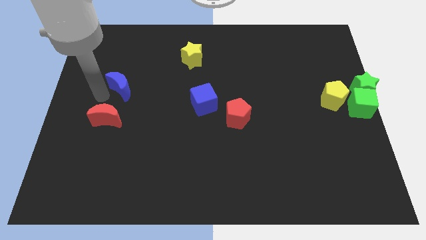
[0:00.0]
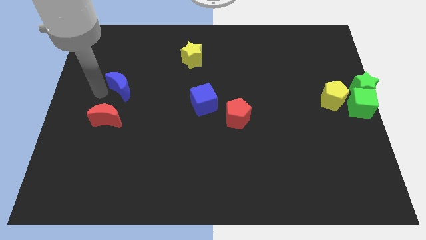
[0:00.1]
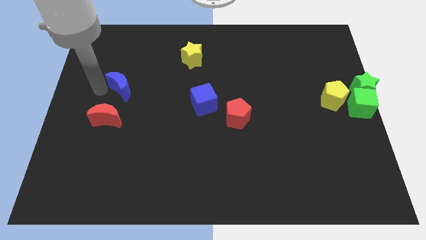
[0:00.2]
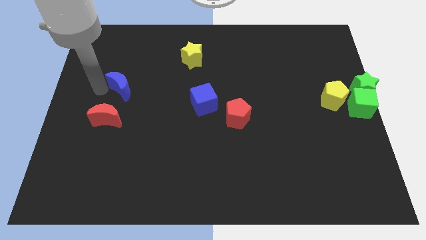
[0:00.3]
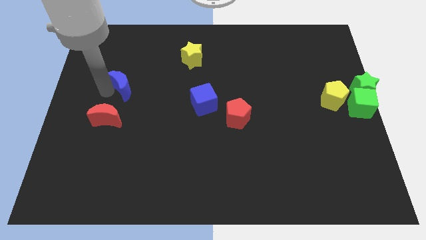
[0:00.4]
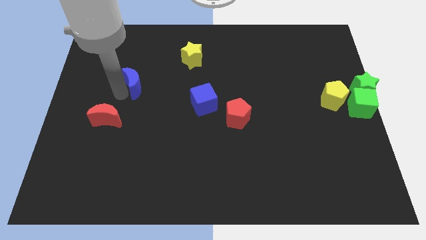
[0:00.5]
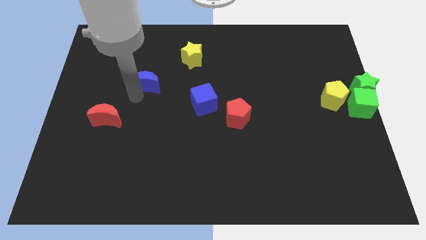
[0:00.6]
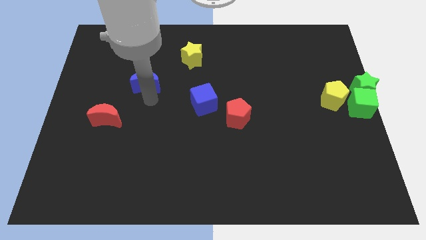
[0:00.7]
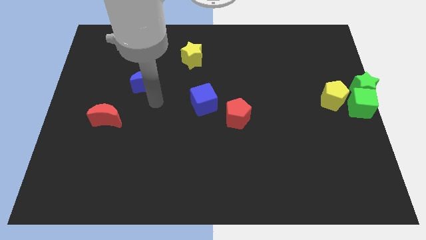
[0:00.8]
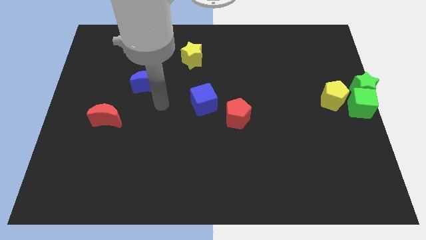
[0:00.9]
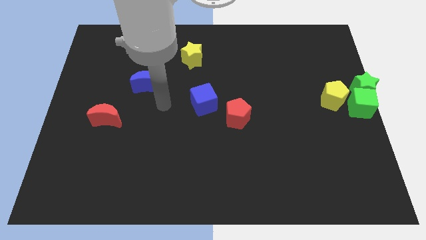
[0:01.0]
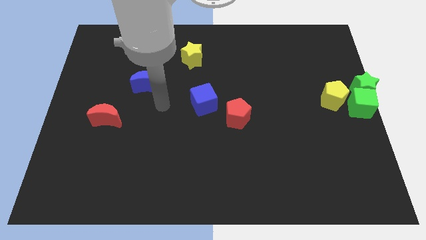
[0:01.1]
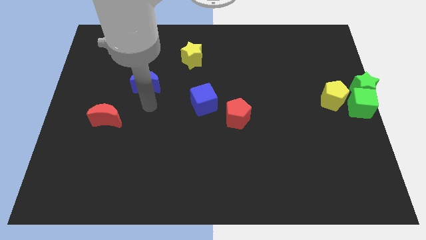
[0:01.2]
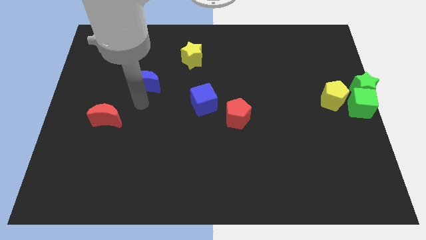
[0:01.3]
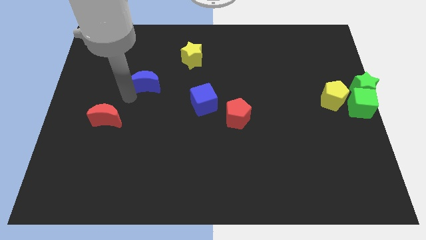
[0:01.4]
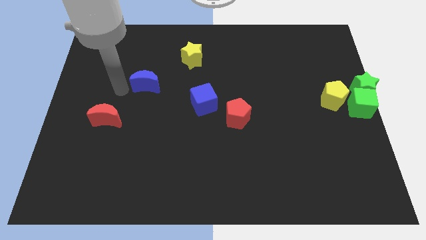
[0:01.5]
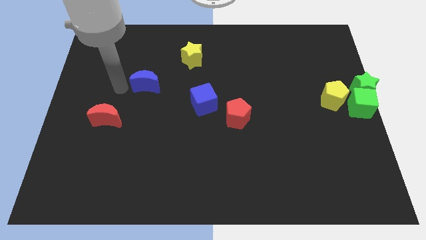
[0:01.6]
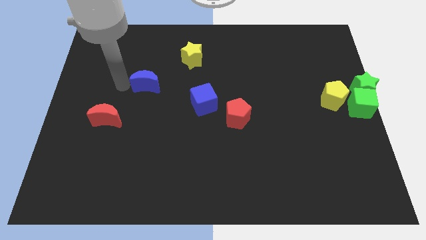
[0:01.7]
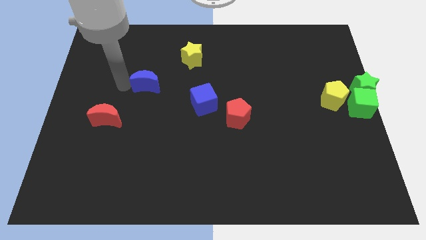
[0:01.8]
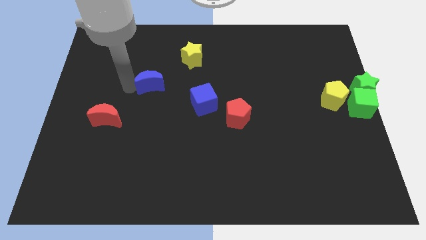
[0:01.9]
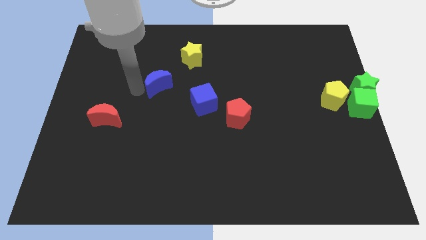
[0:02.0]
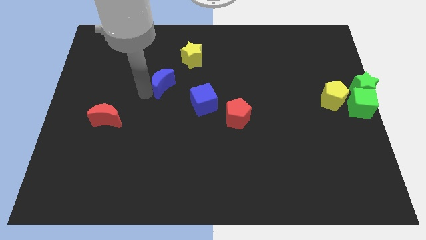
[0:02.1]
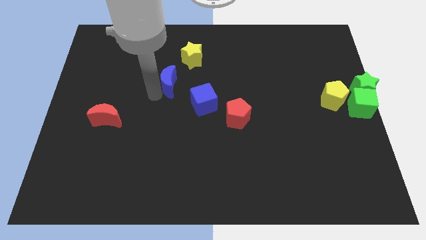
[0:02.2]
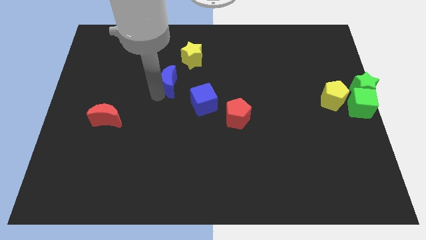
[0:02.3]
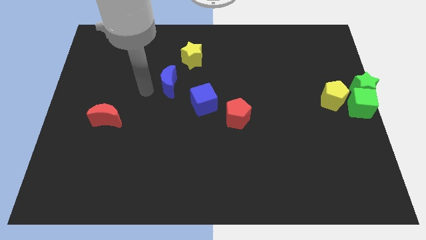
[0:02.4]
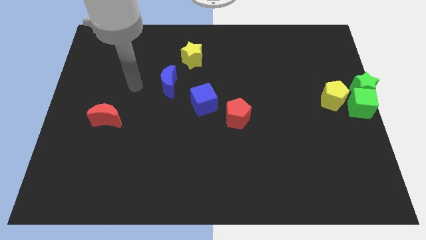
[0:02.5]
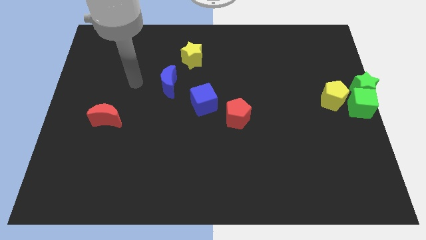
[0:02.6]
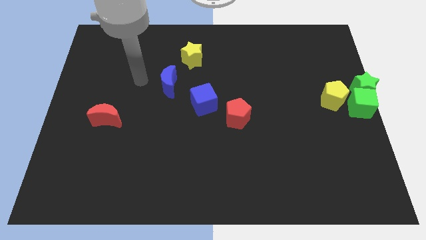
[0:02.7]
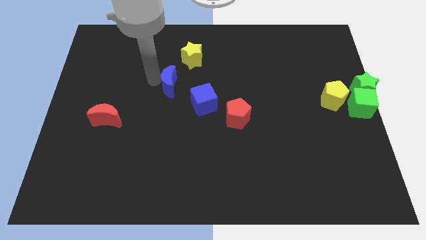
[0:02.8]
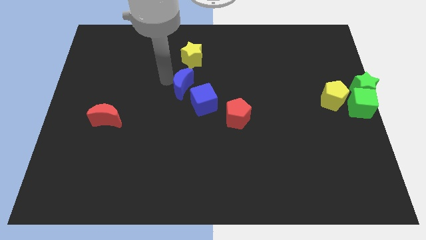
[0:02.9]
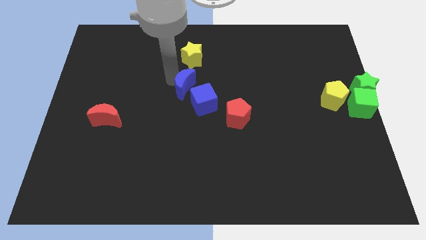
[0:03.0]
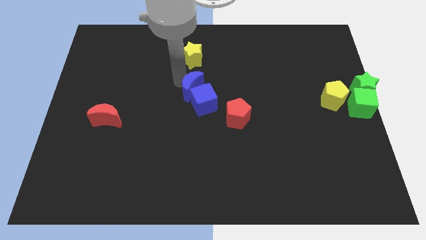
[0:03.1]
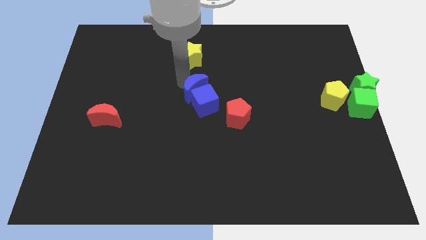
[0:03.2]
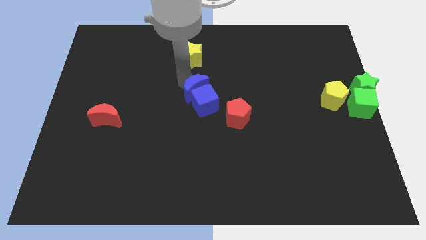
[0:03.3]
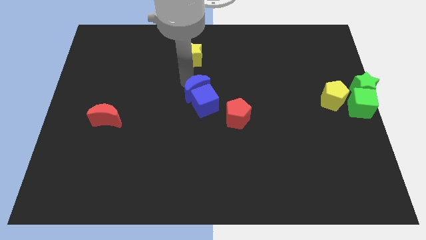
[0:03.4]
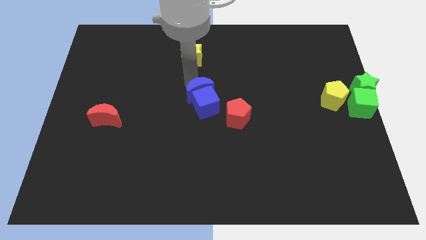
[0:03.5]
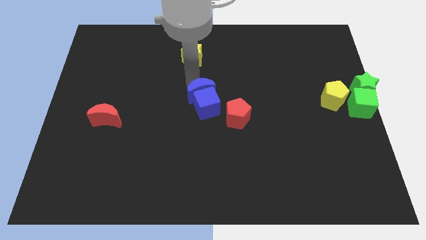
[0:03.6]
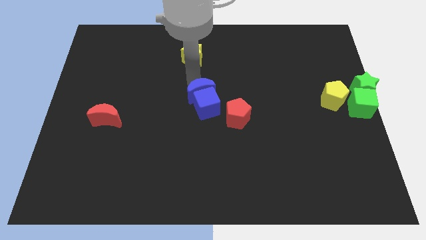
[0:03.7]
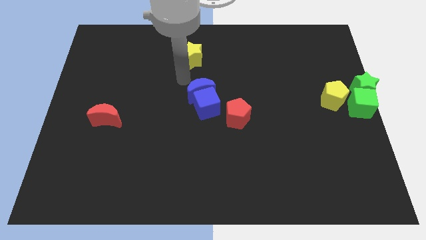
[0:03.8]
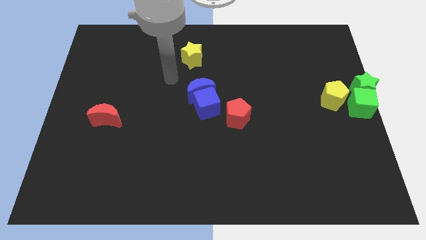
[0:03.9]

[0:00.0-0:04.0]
place both the blue blocks at the center of the board

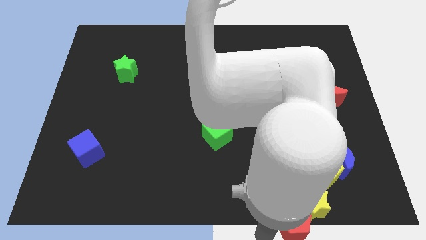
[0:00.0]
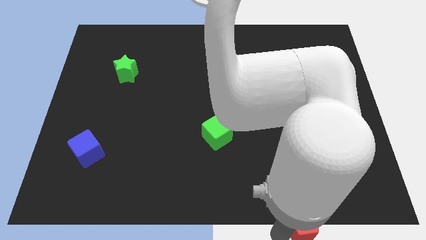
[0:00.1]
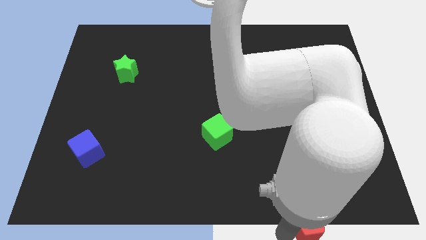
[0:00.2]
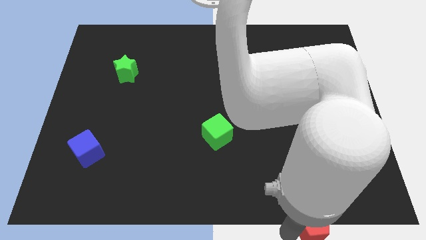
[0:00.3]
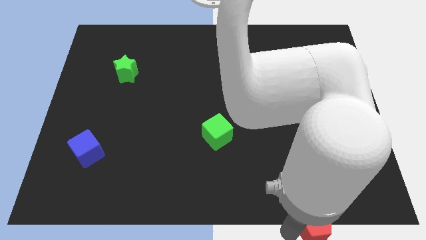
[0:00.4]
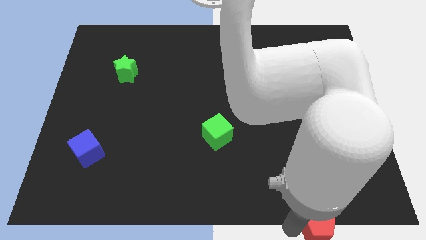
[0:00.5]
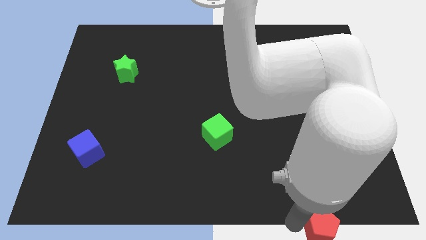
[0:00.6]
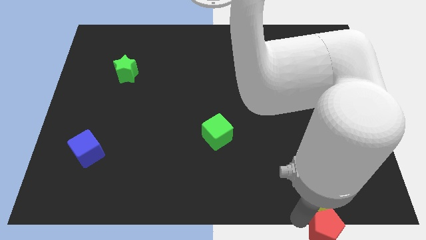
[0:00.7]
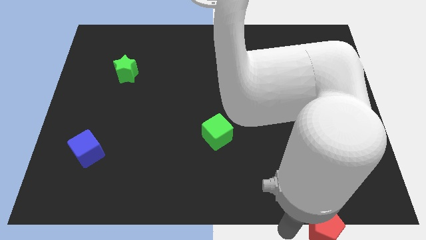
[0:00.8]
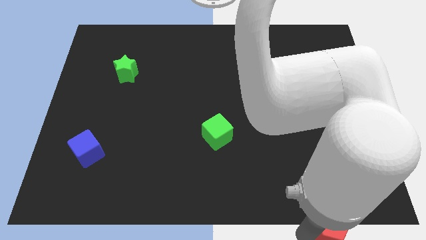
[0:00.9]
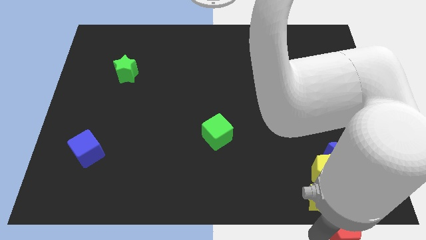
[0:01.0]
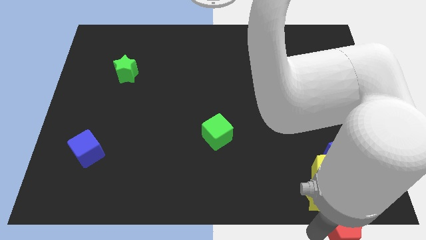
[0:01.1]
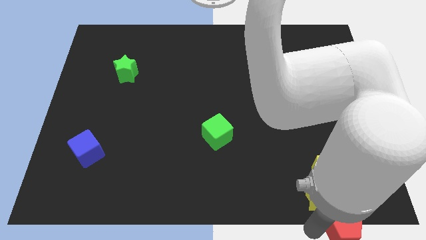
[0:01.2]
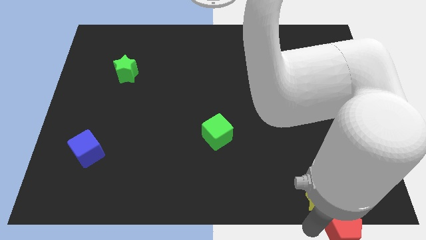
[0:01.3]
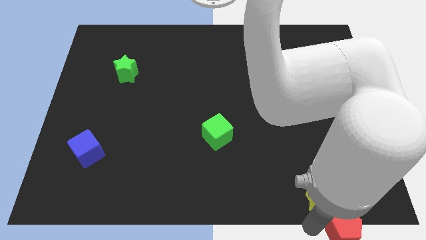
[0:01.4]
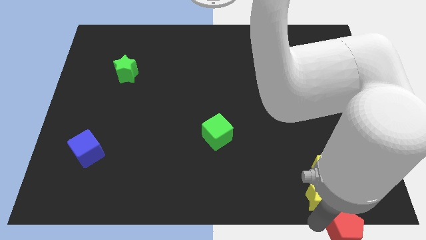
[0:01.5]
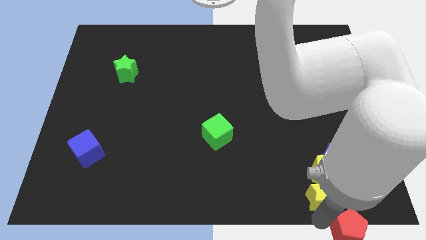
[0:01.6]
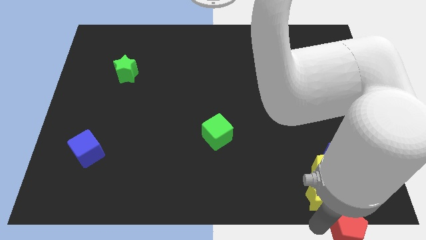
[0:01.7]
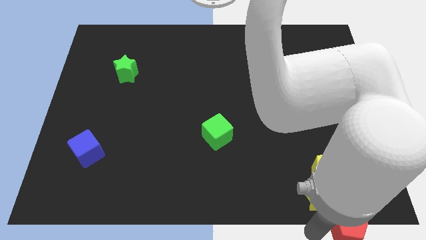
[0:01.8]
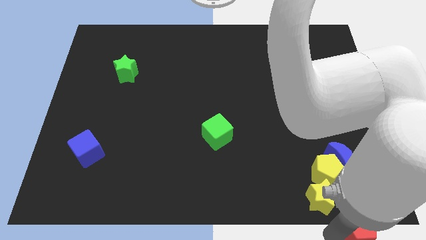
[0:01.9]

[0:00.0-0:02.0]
take the red pentagon away from the yellow star

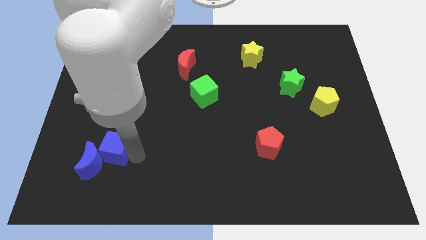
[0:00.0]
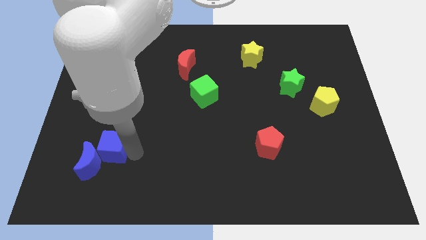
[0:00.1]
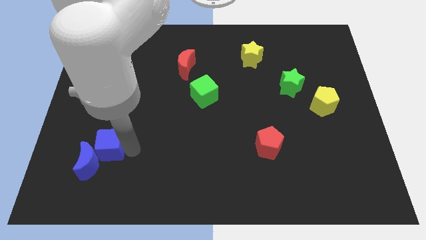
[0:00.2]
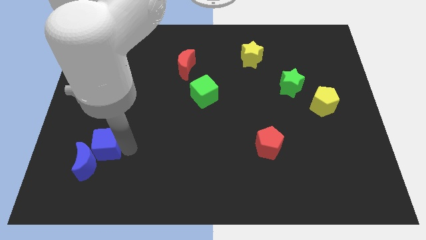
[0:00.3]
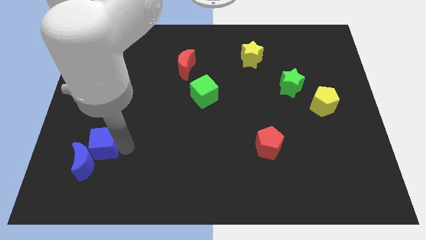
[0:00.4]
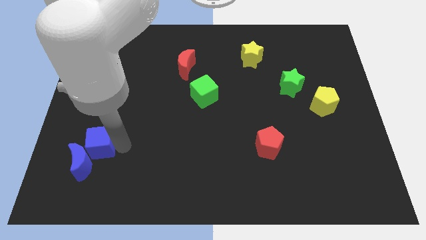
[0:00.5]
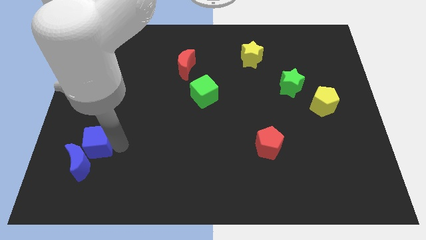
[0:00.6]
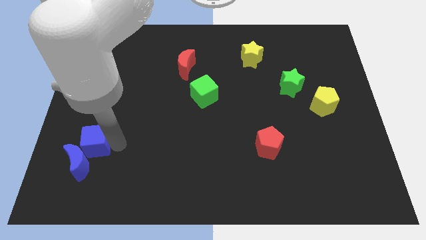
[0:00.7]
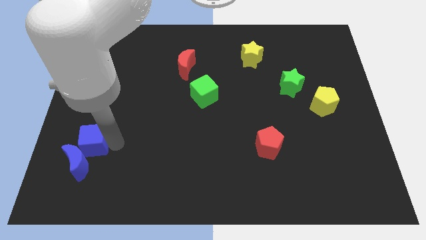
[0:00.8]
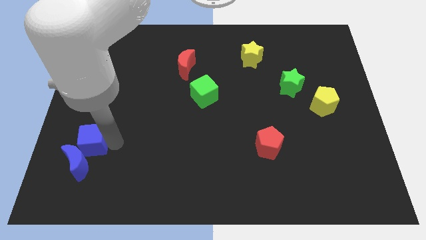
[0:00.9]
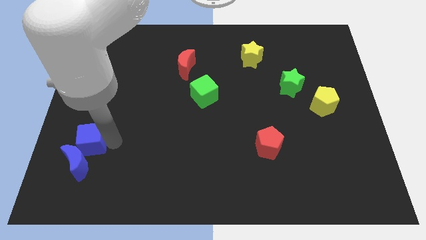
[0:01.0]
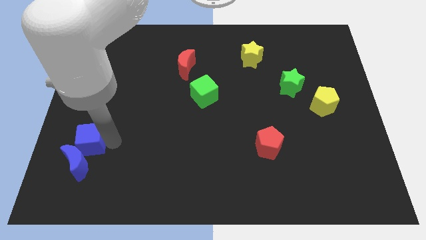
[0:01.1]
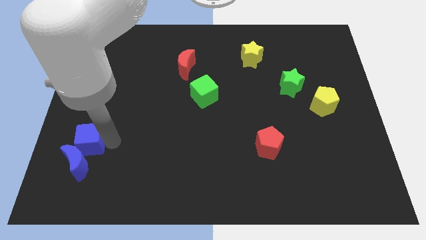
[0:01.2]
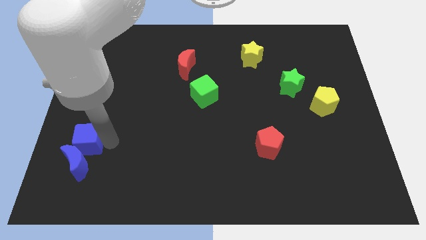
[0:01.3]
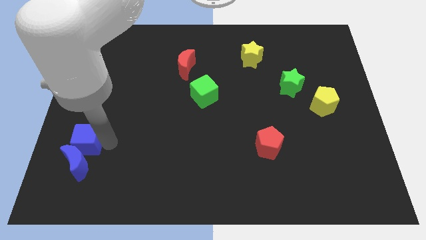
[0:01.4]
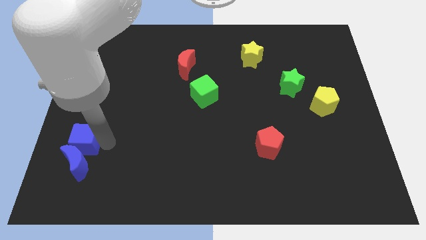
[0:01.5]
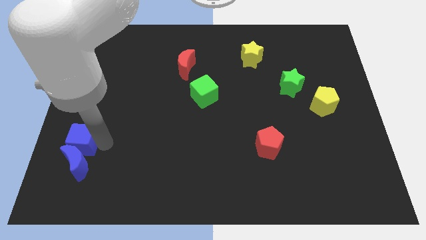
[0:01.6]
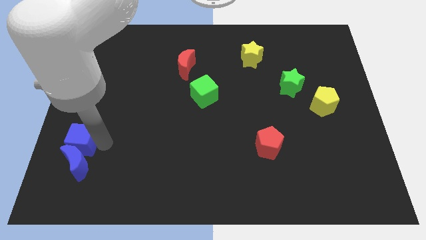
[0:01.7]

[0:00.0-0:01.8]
place the blue cube above the blue crescent

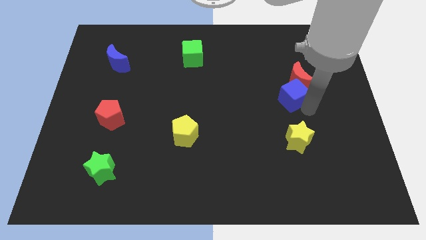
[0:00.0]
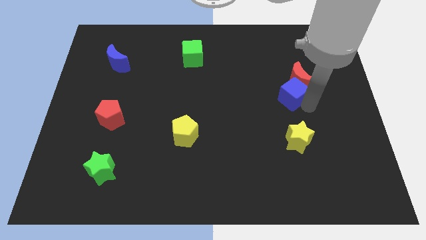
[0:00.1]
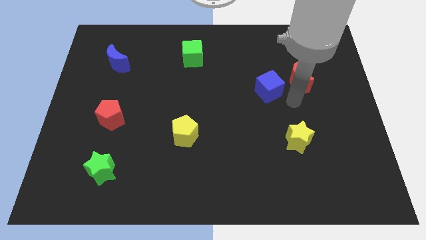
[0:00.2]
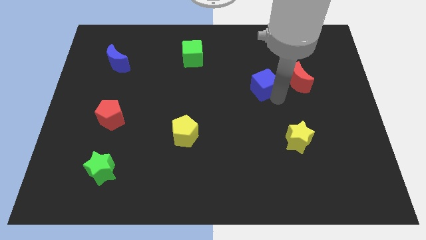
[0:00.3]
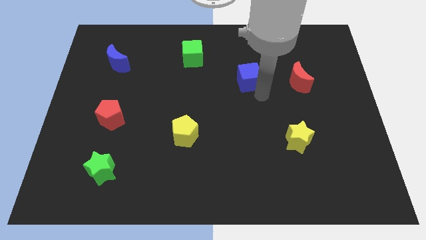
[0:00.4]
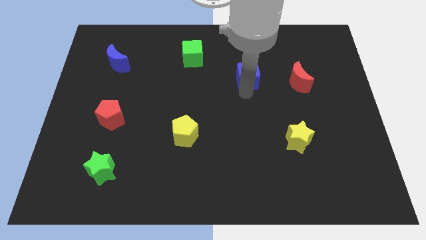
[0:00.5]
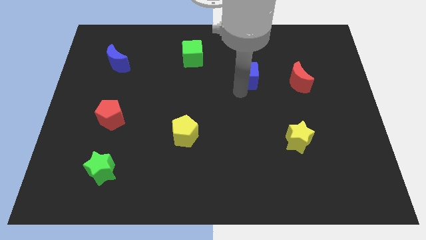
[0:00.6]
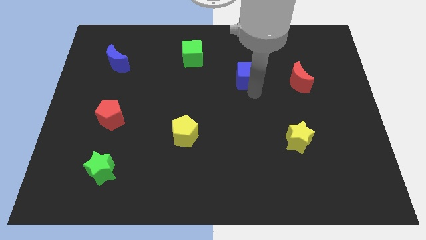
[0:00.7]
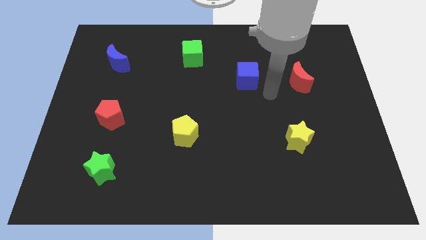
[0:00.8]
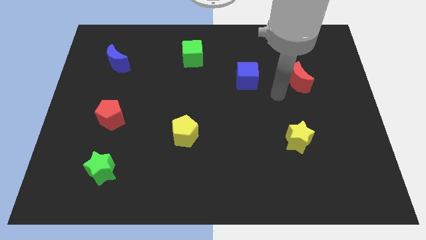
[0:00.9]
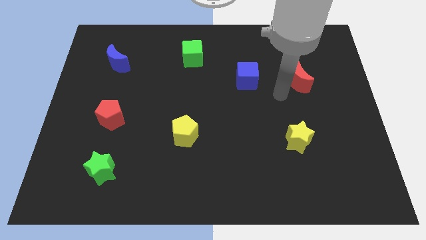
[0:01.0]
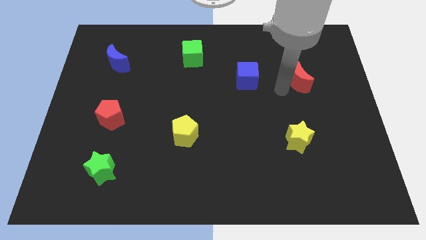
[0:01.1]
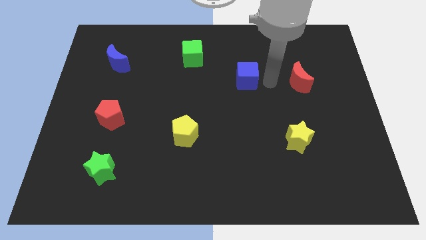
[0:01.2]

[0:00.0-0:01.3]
put the blue cube parallel left to the red crescent
